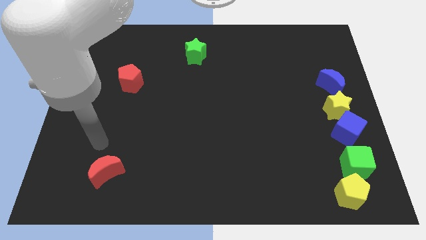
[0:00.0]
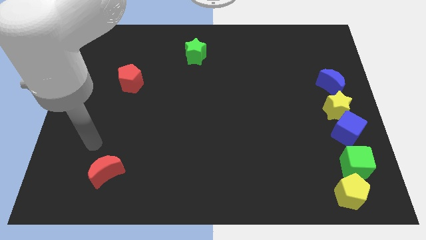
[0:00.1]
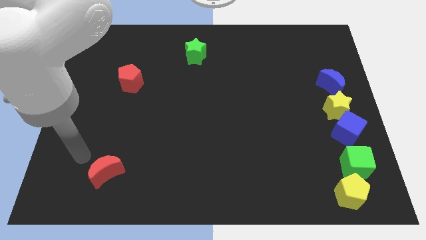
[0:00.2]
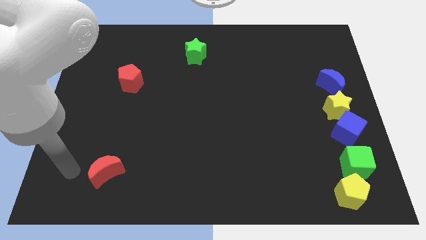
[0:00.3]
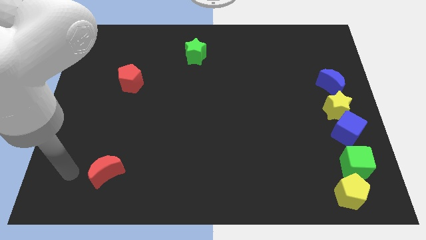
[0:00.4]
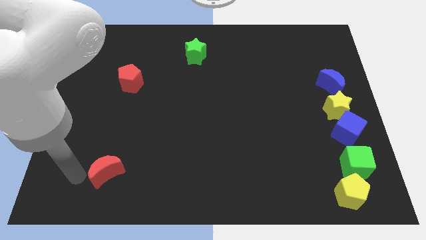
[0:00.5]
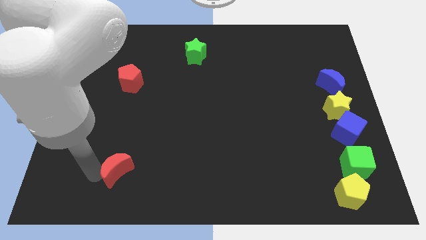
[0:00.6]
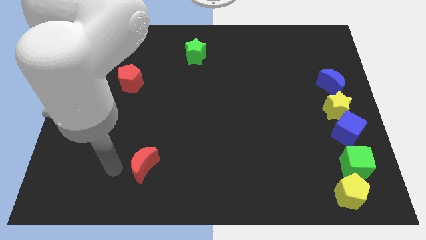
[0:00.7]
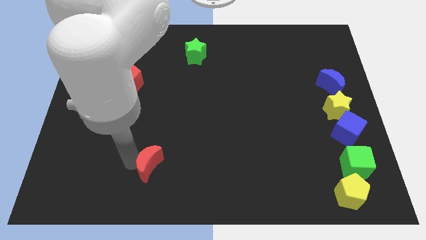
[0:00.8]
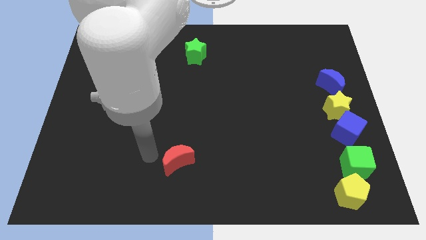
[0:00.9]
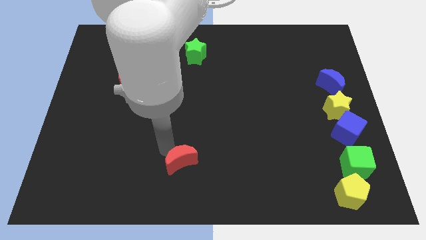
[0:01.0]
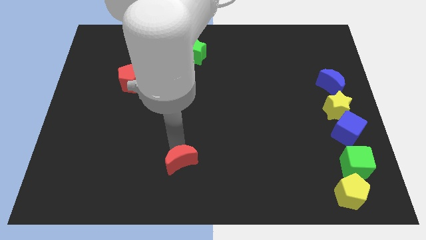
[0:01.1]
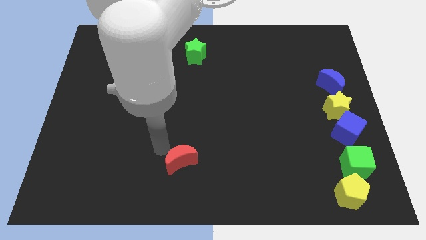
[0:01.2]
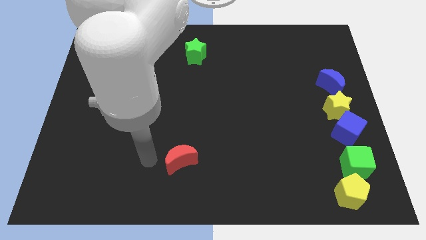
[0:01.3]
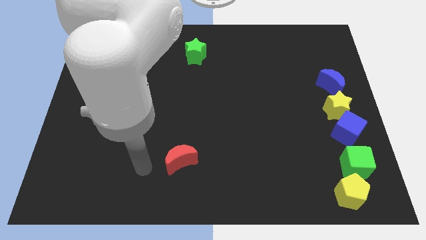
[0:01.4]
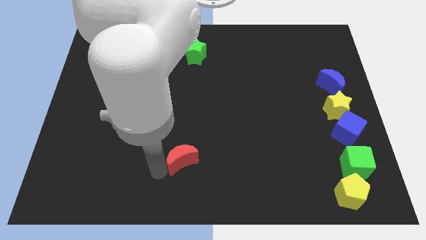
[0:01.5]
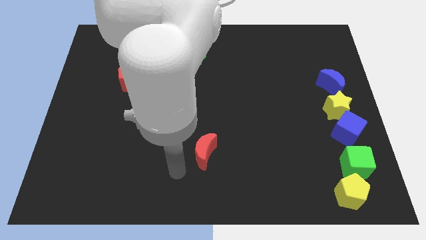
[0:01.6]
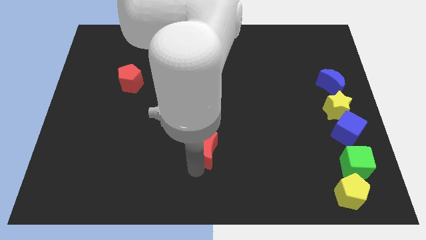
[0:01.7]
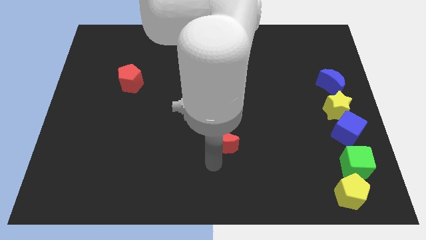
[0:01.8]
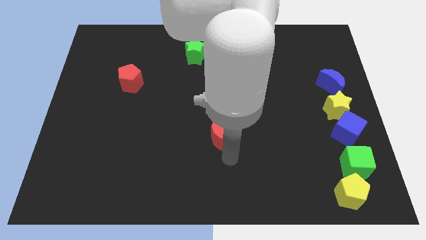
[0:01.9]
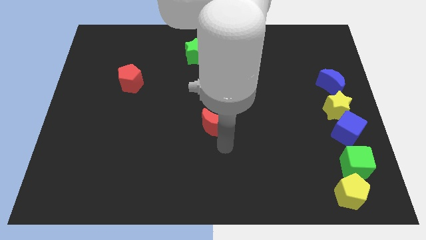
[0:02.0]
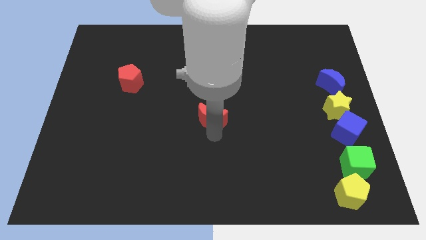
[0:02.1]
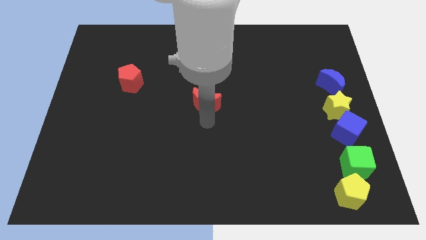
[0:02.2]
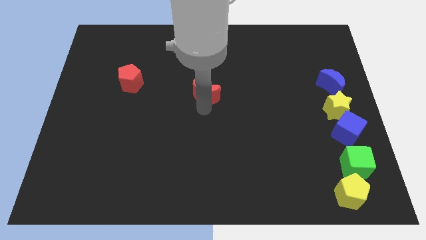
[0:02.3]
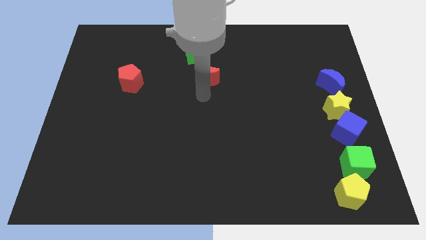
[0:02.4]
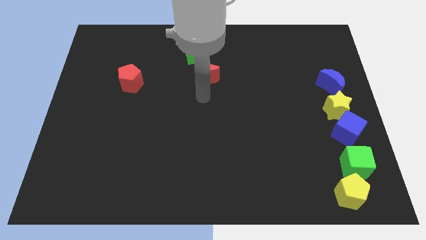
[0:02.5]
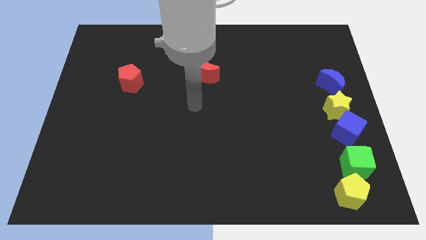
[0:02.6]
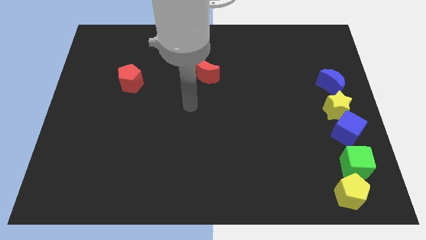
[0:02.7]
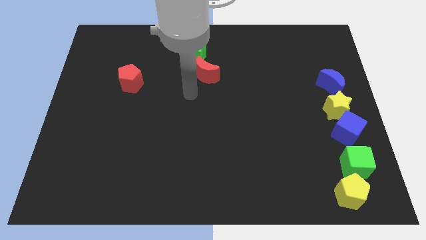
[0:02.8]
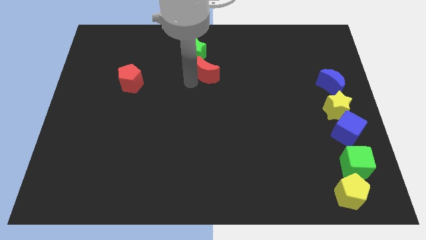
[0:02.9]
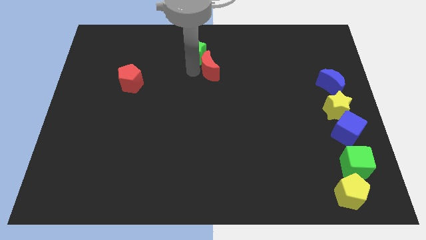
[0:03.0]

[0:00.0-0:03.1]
place the red moon at the bottom of green star

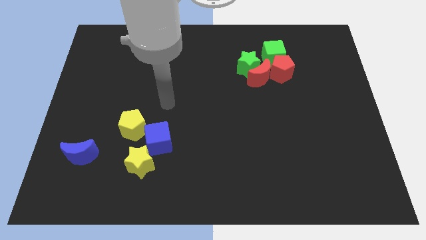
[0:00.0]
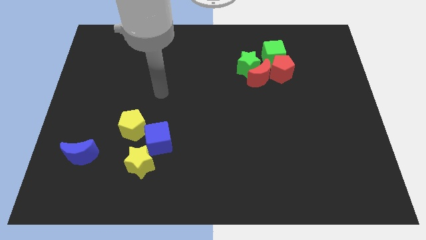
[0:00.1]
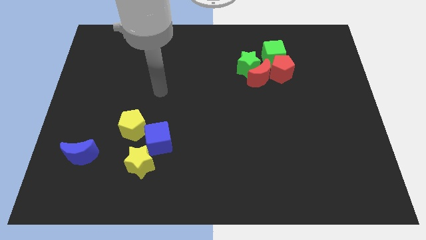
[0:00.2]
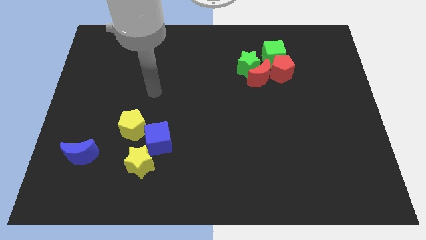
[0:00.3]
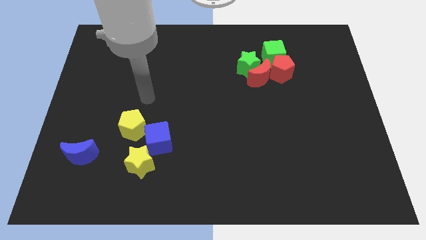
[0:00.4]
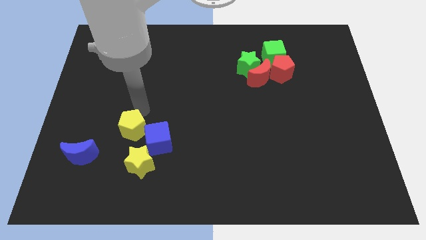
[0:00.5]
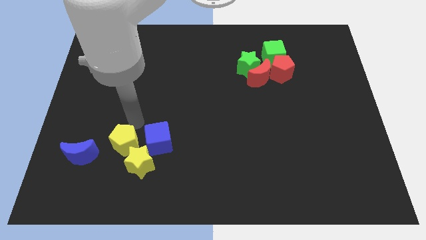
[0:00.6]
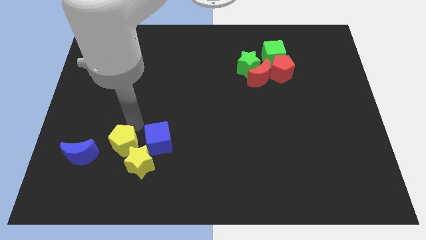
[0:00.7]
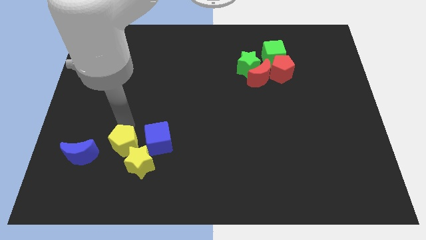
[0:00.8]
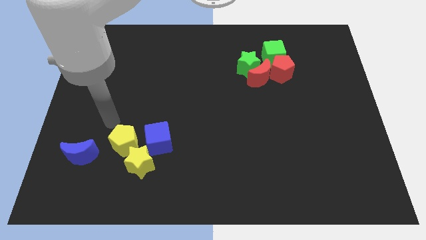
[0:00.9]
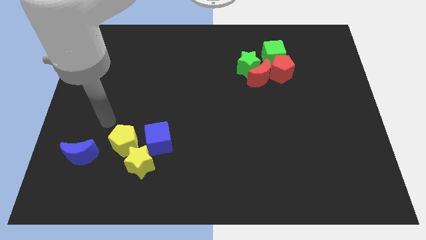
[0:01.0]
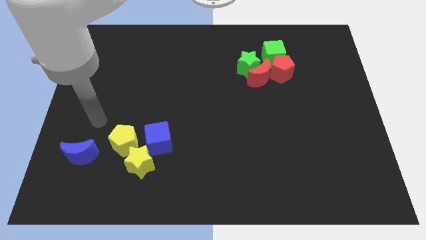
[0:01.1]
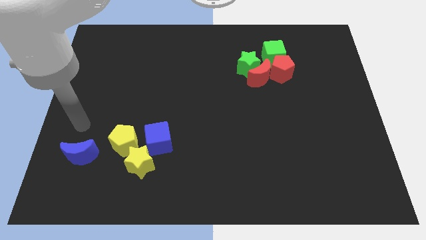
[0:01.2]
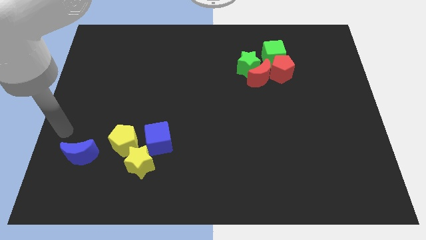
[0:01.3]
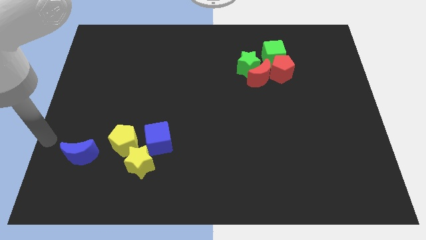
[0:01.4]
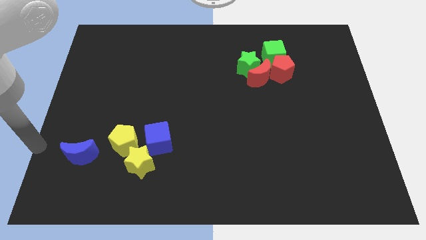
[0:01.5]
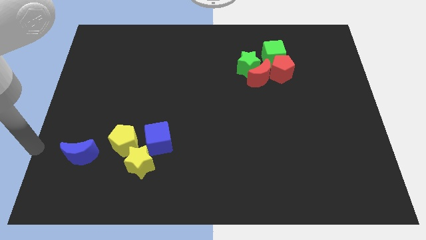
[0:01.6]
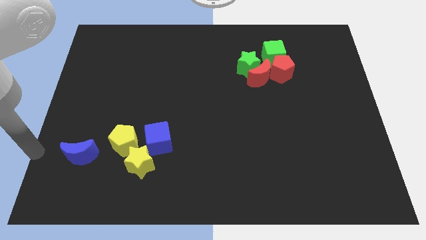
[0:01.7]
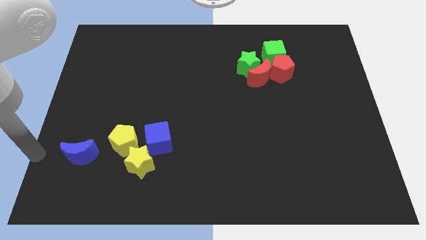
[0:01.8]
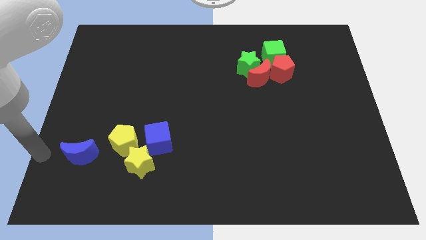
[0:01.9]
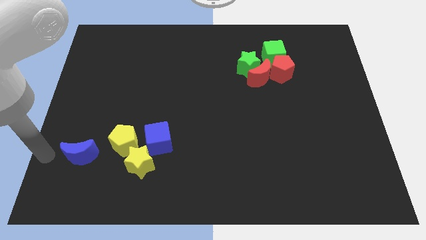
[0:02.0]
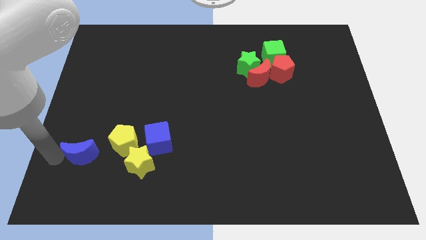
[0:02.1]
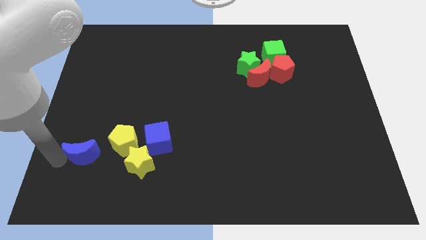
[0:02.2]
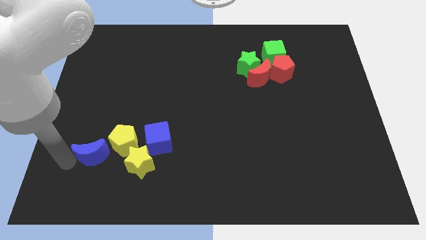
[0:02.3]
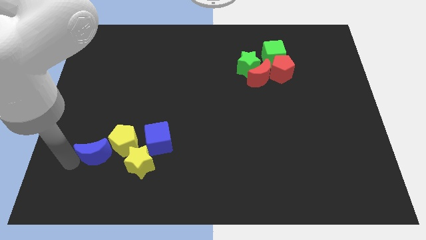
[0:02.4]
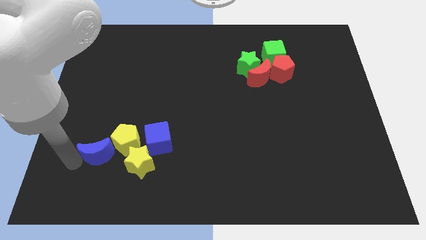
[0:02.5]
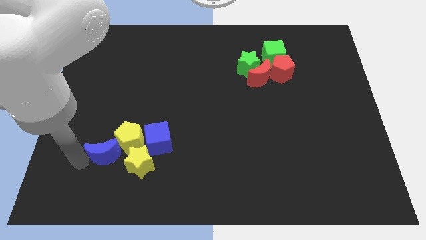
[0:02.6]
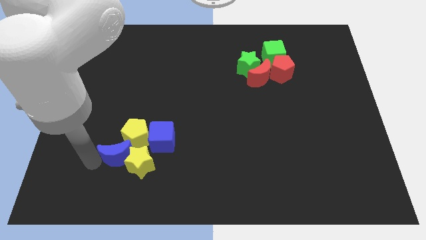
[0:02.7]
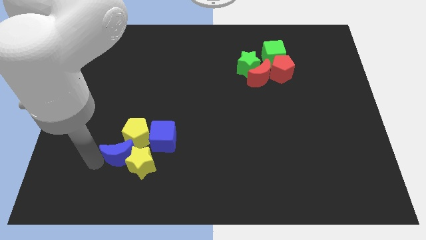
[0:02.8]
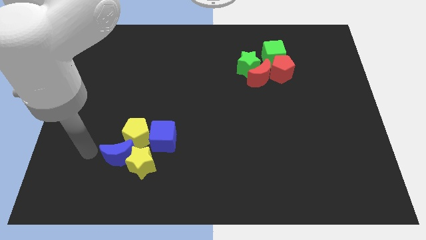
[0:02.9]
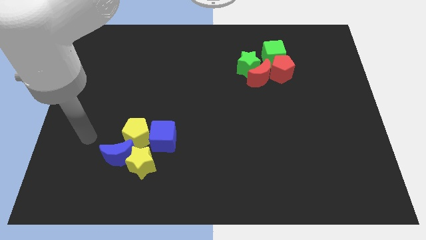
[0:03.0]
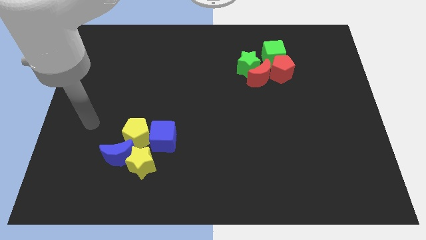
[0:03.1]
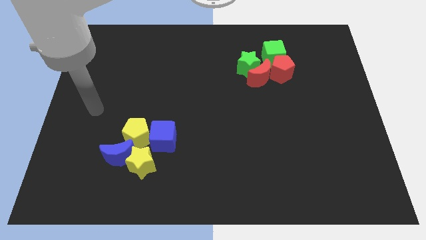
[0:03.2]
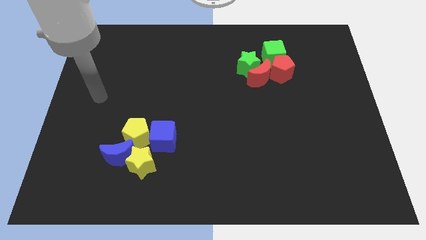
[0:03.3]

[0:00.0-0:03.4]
push the blue moon to the group of blocks

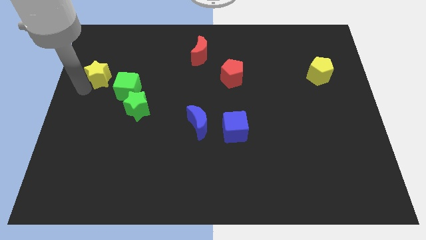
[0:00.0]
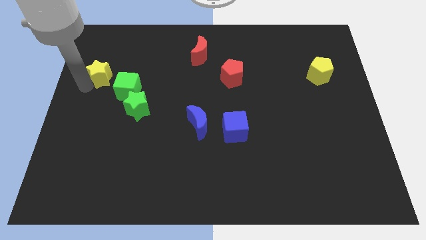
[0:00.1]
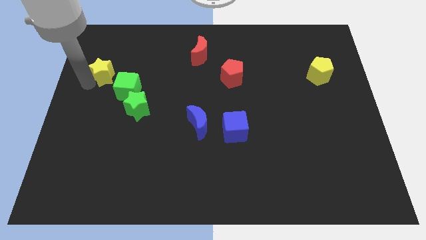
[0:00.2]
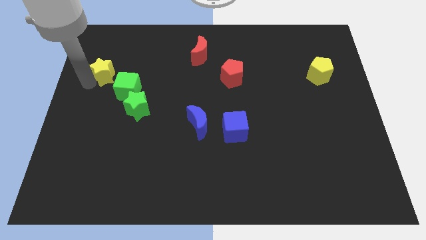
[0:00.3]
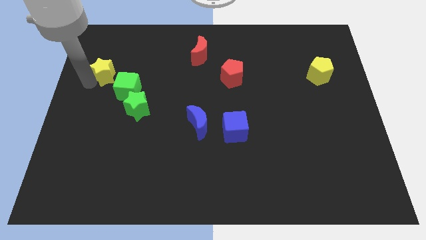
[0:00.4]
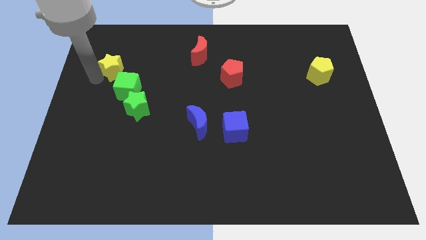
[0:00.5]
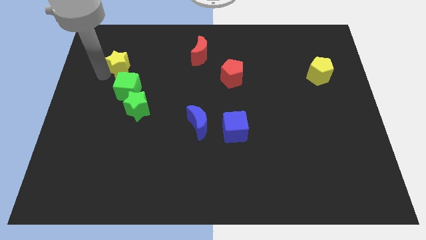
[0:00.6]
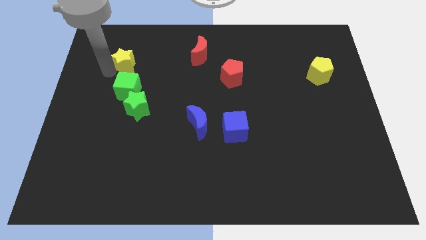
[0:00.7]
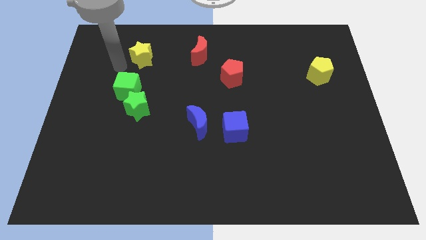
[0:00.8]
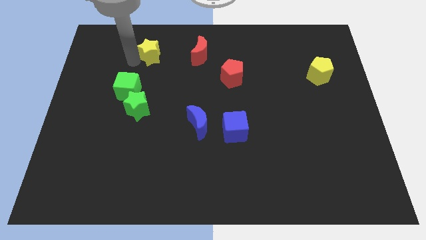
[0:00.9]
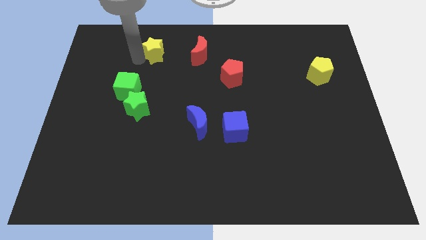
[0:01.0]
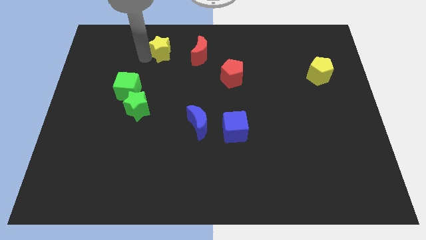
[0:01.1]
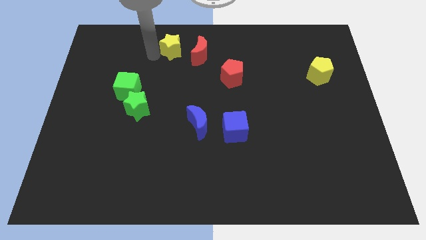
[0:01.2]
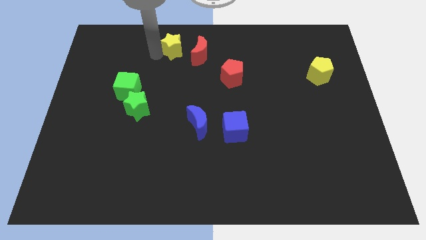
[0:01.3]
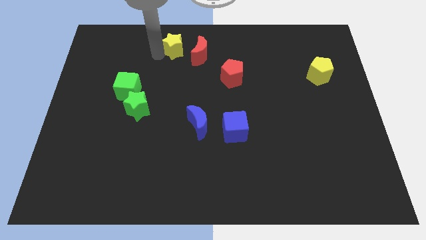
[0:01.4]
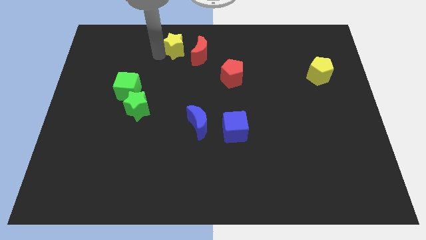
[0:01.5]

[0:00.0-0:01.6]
place the yellow star diagonally right above green cube

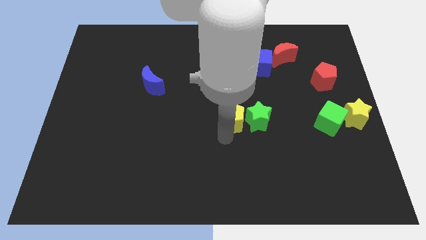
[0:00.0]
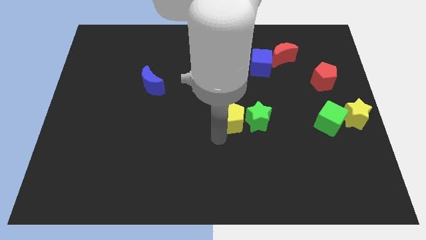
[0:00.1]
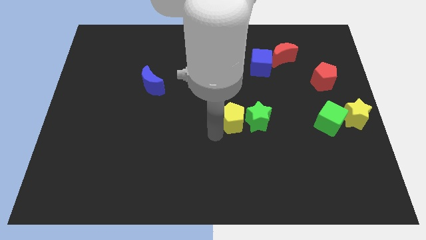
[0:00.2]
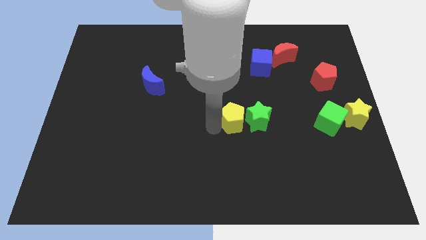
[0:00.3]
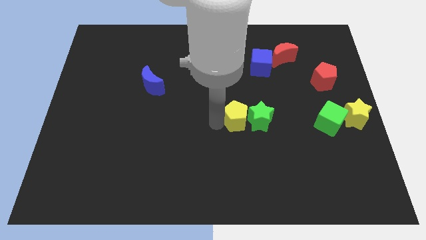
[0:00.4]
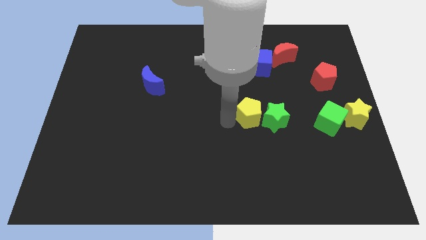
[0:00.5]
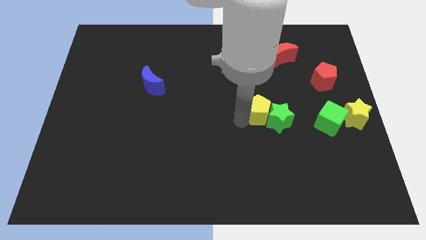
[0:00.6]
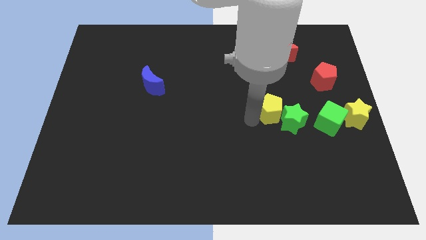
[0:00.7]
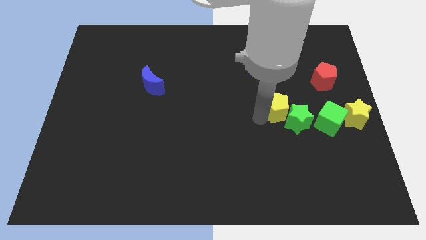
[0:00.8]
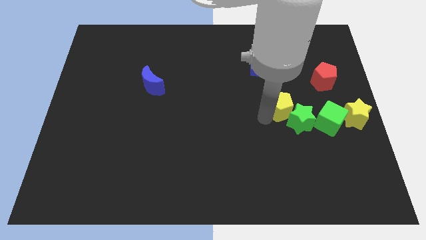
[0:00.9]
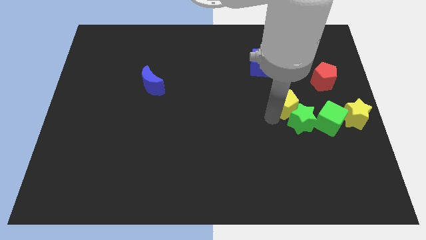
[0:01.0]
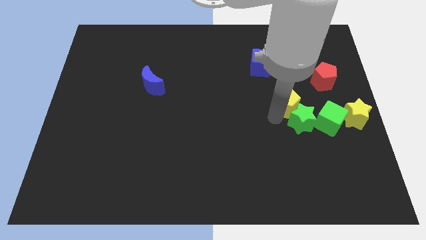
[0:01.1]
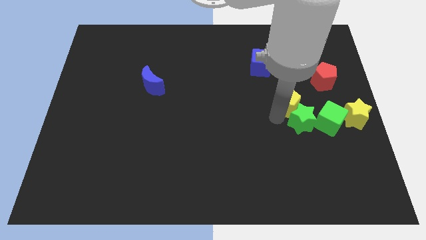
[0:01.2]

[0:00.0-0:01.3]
push the yellow pentagon and green star close to the green cube
